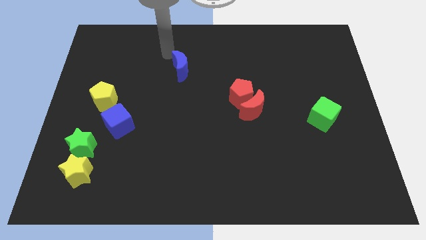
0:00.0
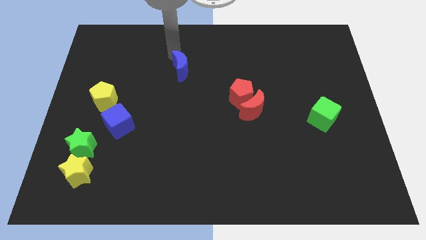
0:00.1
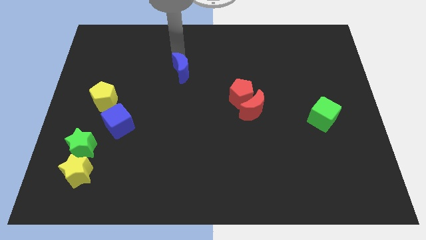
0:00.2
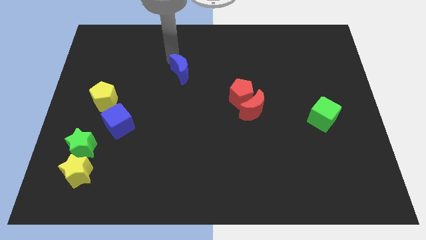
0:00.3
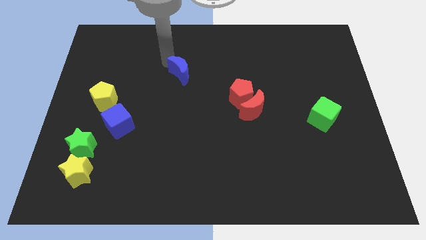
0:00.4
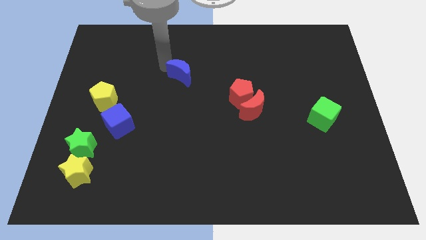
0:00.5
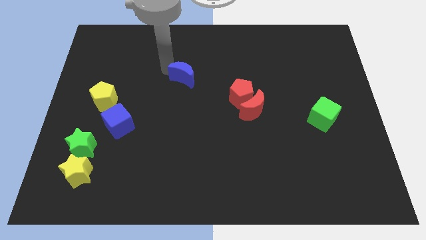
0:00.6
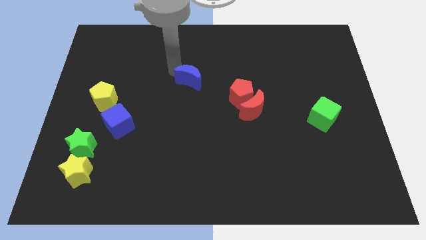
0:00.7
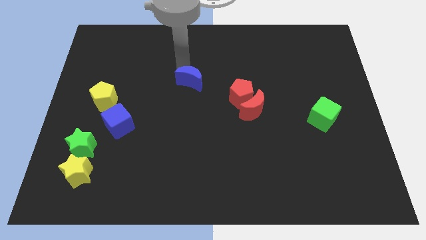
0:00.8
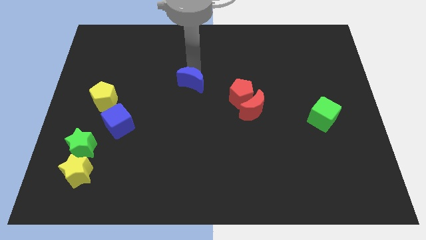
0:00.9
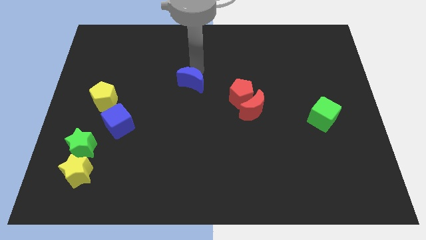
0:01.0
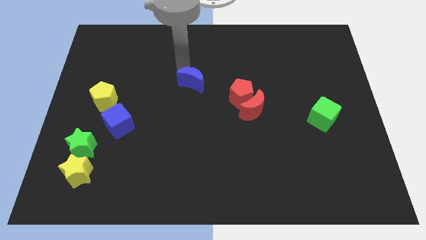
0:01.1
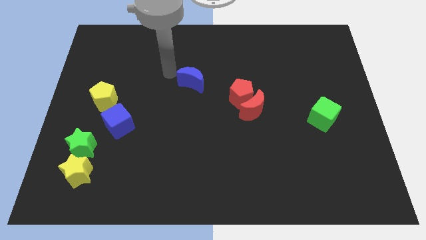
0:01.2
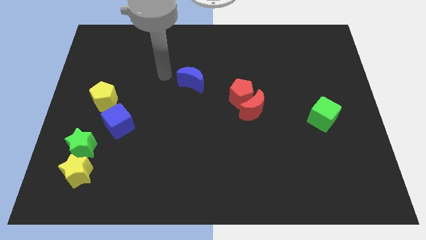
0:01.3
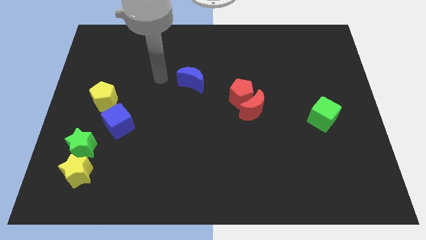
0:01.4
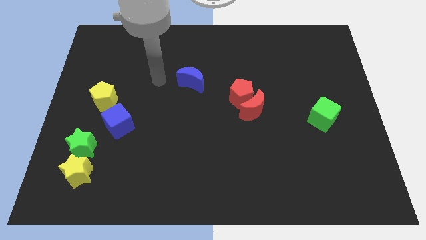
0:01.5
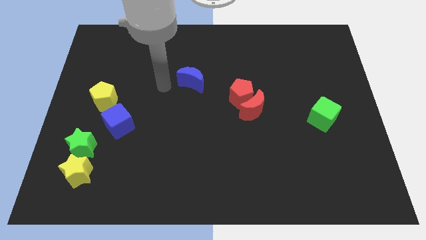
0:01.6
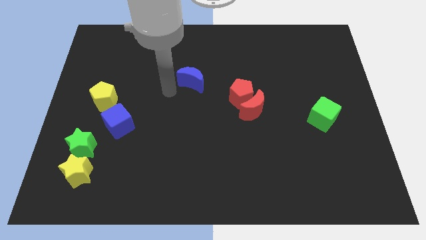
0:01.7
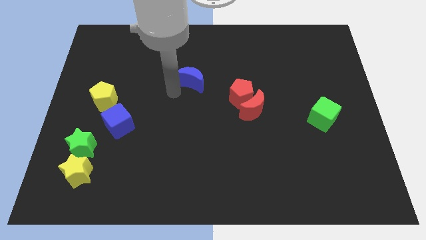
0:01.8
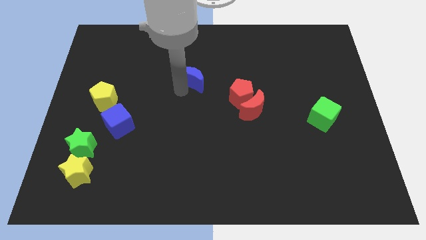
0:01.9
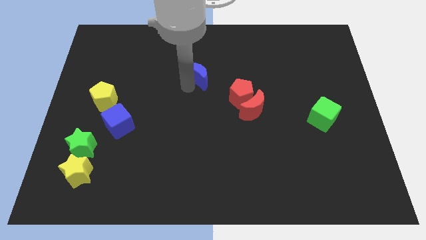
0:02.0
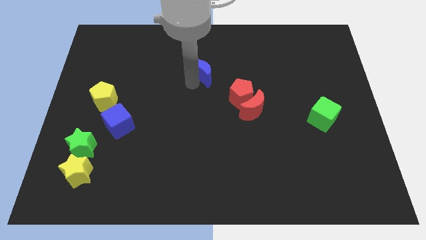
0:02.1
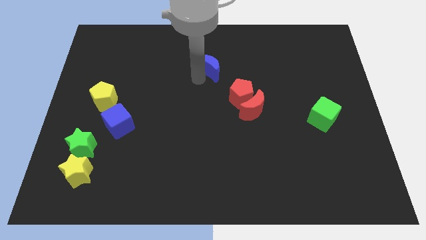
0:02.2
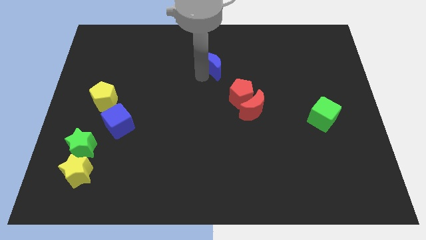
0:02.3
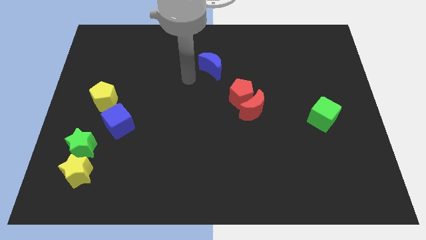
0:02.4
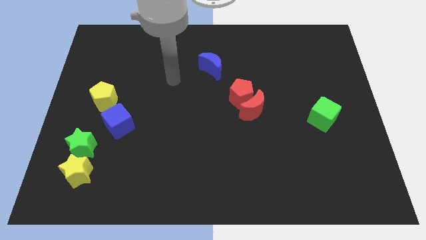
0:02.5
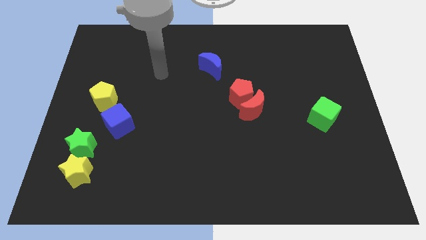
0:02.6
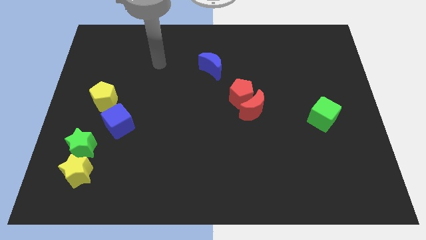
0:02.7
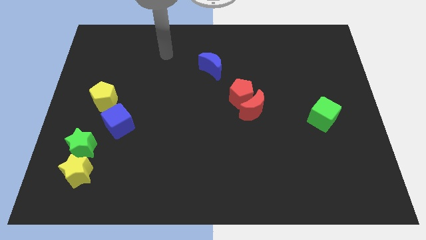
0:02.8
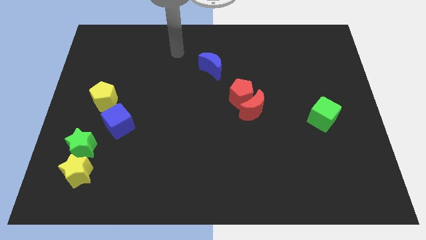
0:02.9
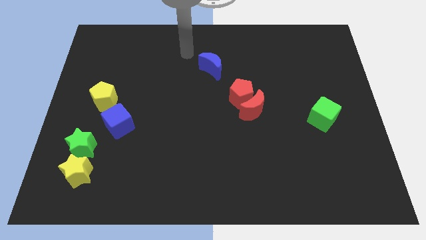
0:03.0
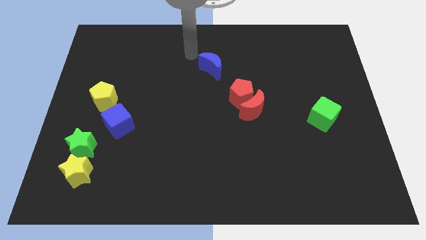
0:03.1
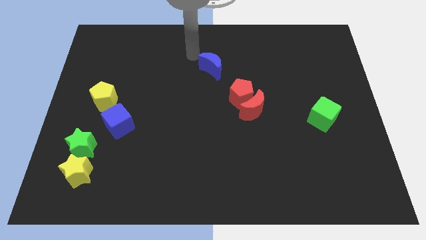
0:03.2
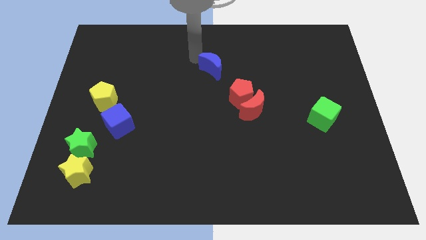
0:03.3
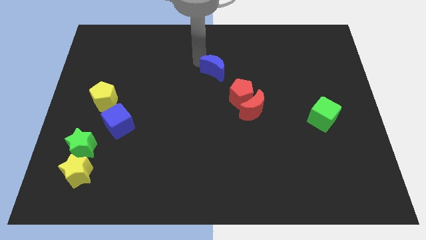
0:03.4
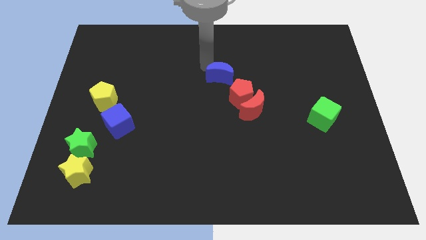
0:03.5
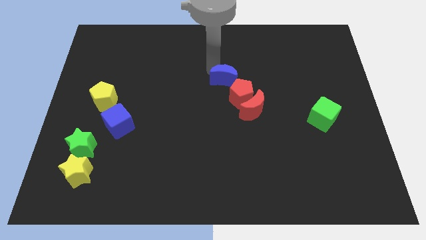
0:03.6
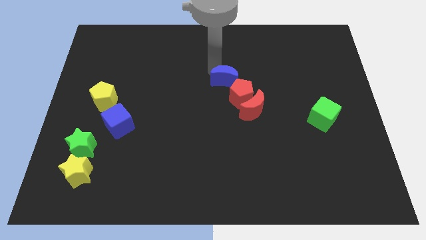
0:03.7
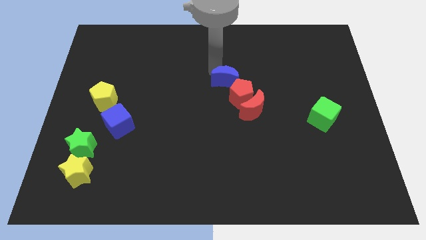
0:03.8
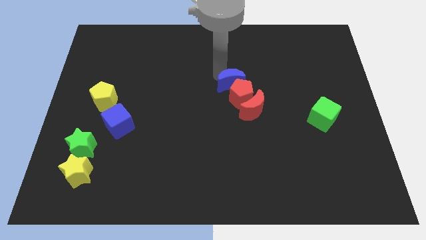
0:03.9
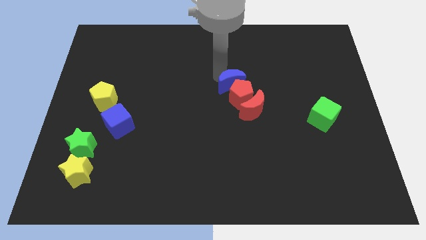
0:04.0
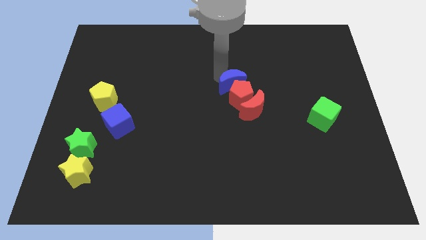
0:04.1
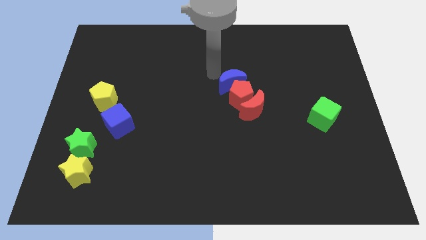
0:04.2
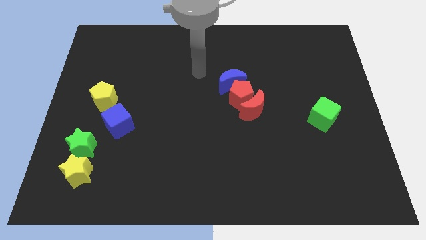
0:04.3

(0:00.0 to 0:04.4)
move the blue crescent above the red pentagon

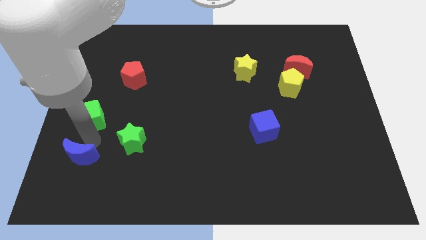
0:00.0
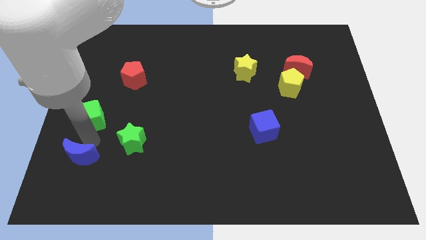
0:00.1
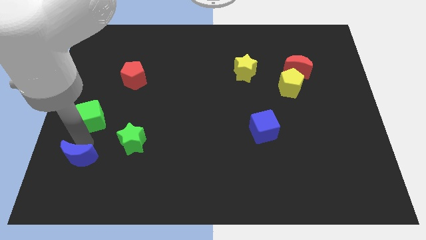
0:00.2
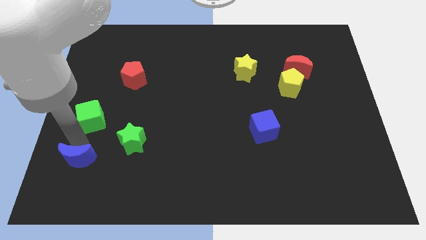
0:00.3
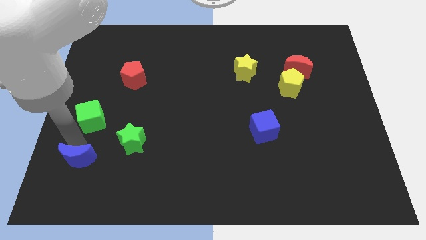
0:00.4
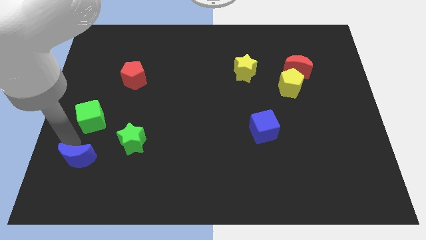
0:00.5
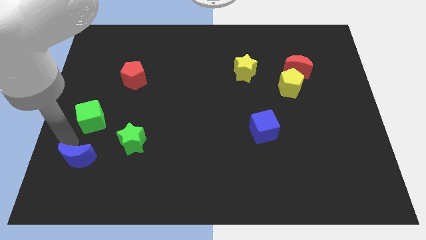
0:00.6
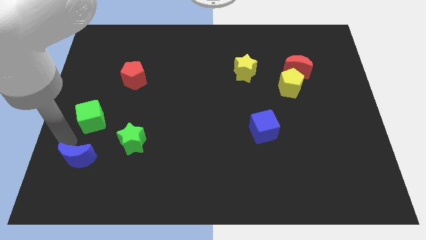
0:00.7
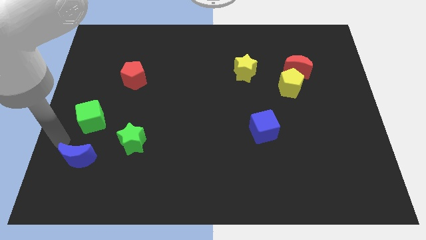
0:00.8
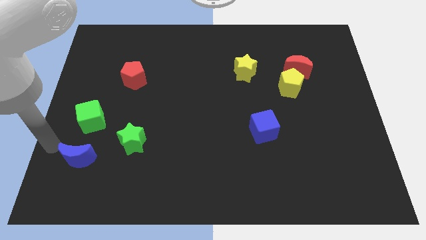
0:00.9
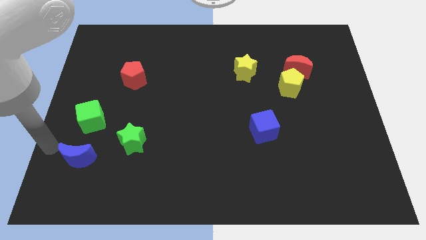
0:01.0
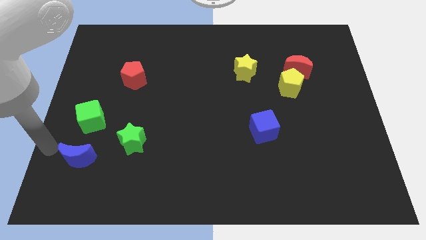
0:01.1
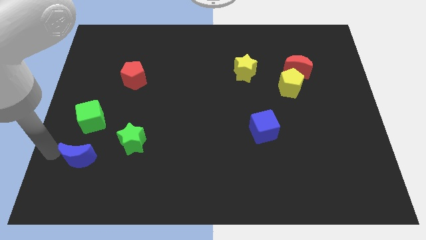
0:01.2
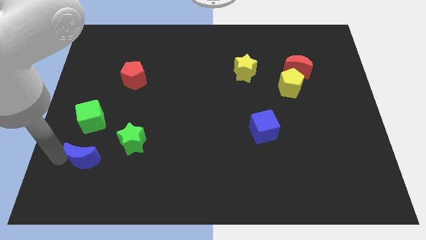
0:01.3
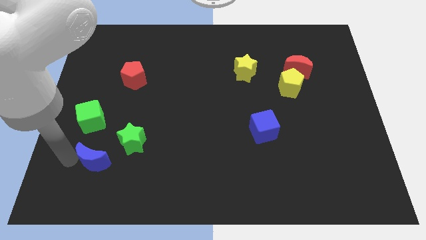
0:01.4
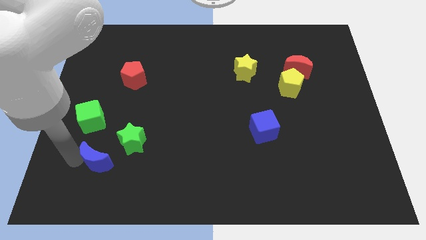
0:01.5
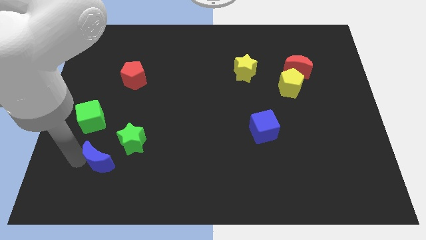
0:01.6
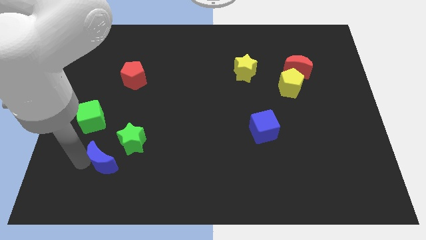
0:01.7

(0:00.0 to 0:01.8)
move the blue moon to the bottom left of the green star

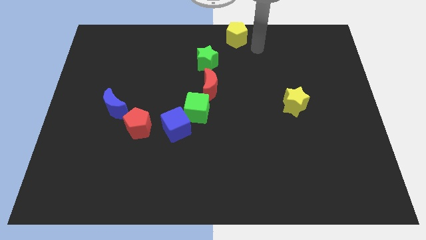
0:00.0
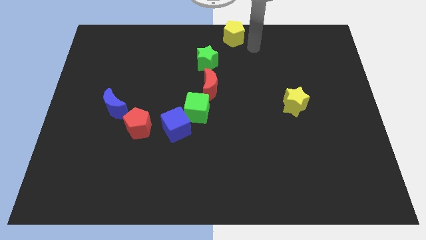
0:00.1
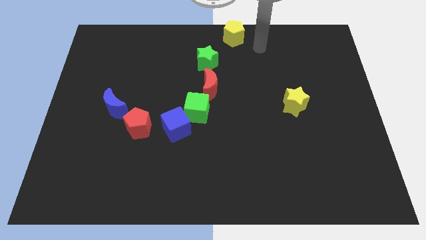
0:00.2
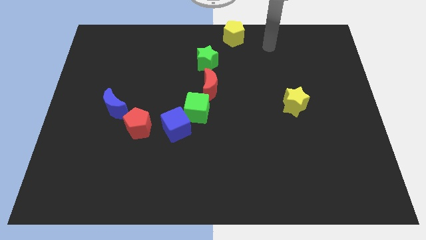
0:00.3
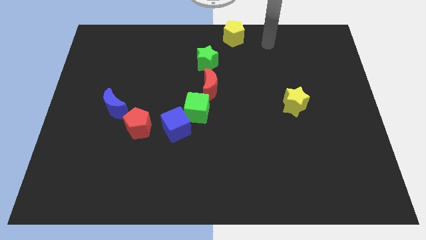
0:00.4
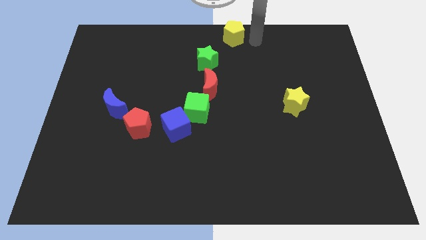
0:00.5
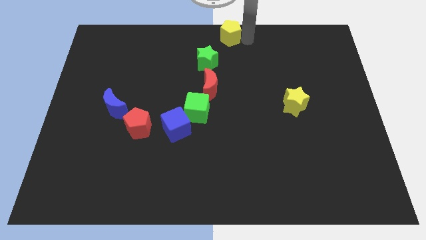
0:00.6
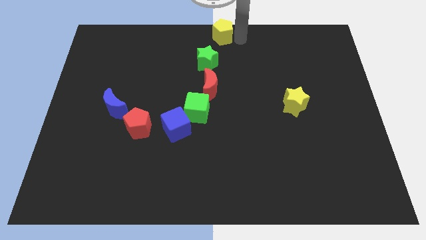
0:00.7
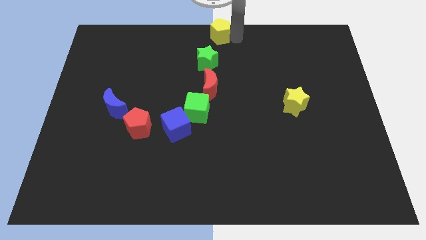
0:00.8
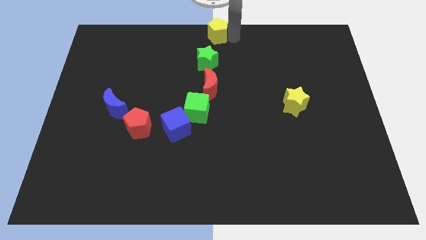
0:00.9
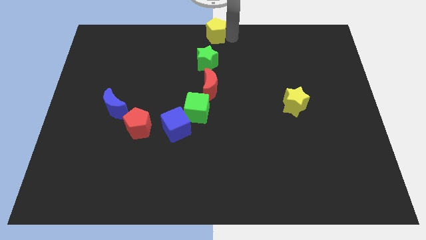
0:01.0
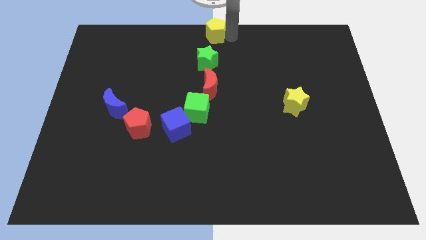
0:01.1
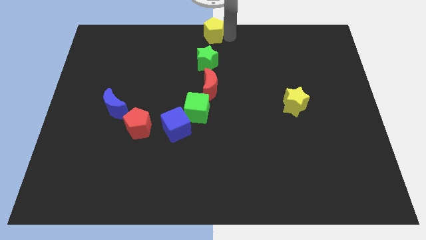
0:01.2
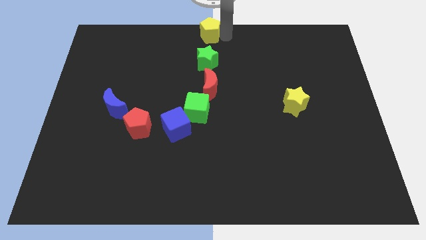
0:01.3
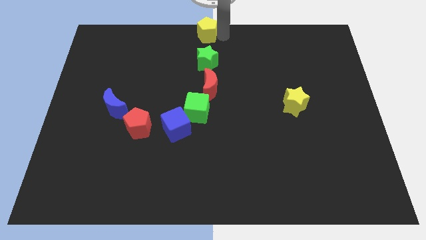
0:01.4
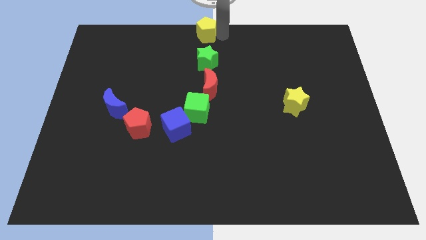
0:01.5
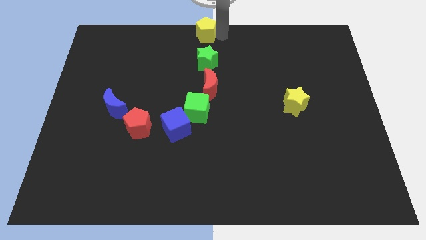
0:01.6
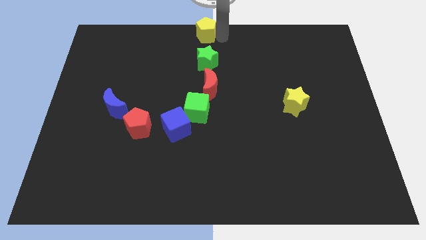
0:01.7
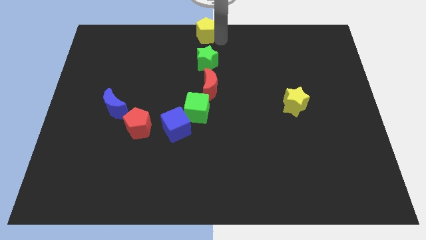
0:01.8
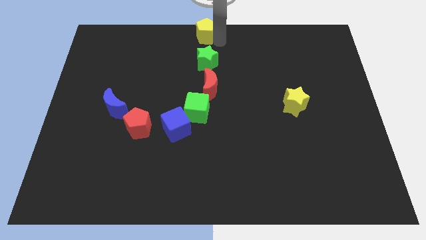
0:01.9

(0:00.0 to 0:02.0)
move yellow pentagon ti the top center of the board

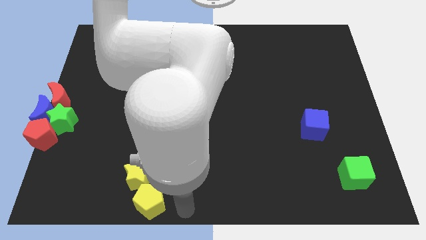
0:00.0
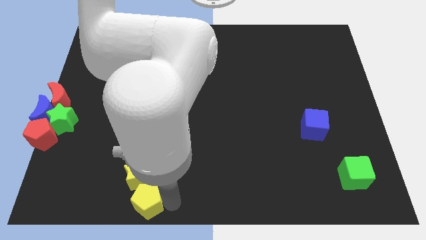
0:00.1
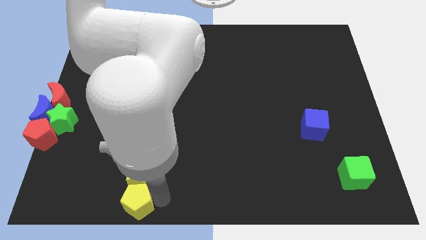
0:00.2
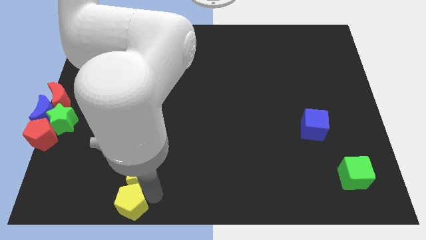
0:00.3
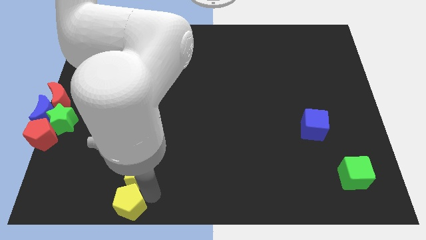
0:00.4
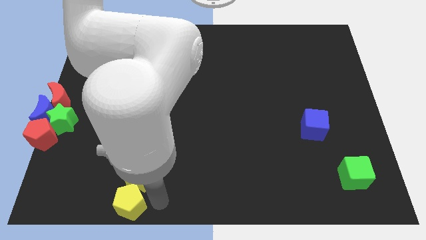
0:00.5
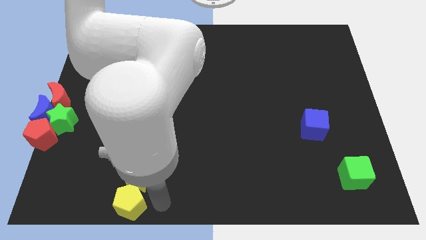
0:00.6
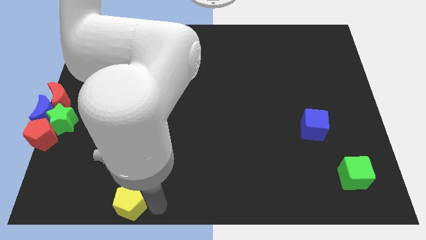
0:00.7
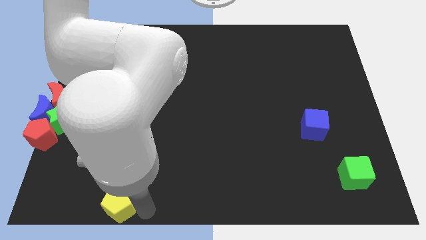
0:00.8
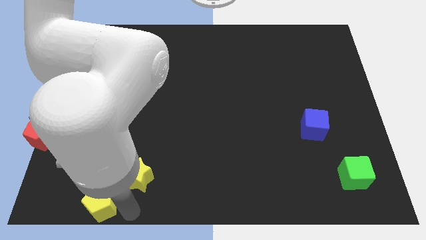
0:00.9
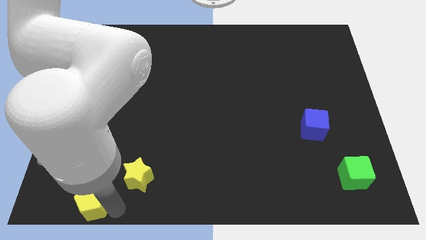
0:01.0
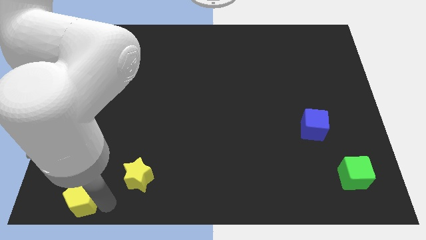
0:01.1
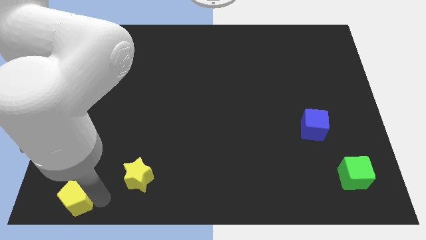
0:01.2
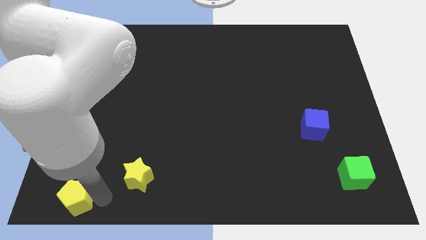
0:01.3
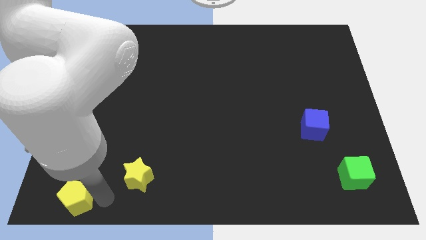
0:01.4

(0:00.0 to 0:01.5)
separate the yellow blocks
